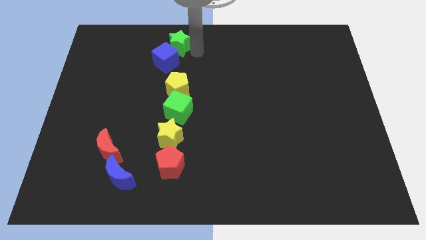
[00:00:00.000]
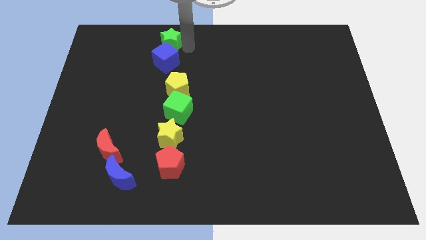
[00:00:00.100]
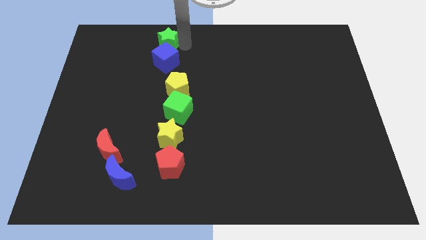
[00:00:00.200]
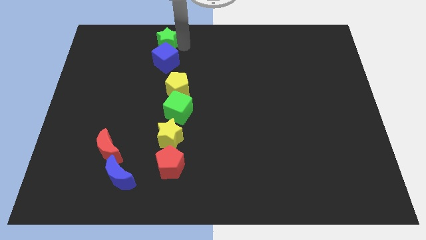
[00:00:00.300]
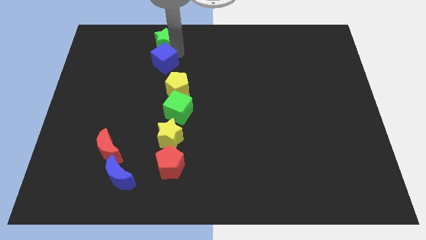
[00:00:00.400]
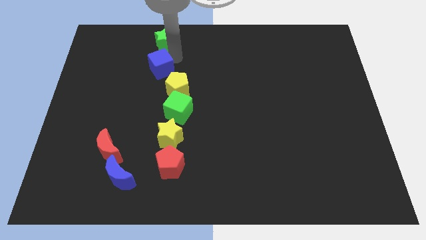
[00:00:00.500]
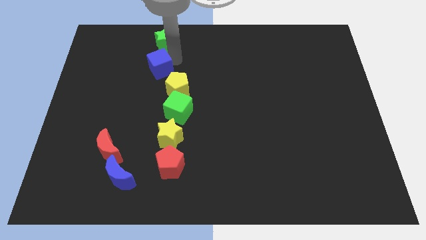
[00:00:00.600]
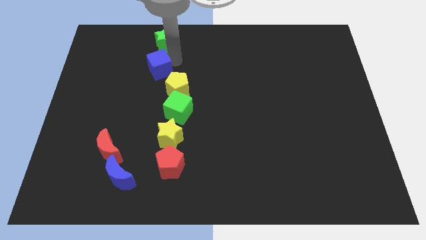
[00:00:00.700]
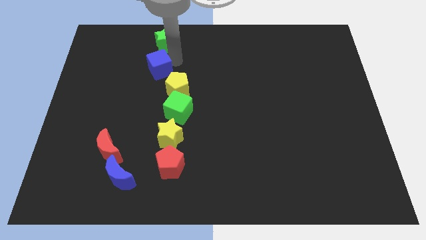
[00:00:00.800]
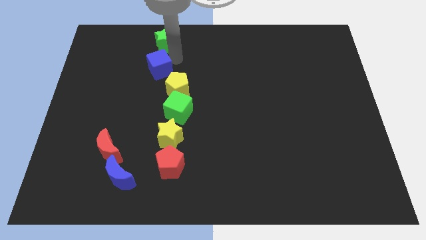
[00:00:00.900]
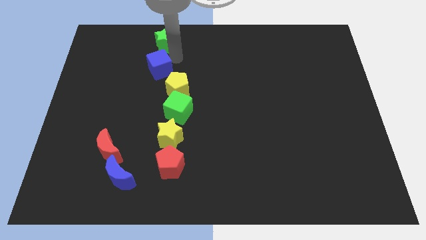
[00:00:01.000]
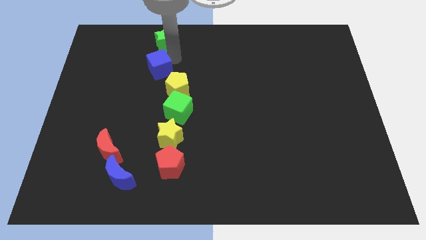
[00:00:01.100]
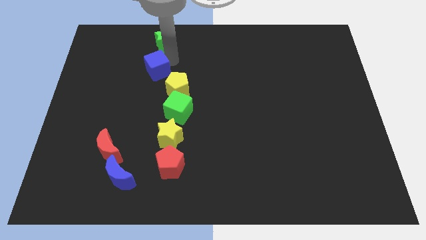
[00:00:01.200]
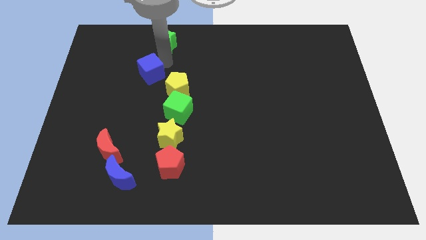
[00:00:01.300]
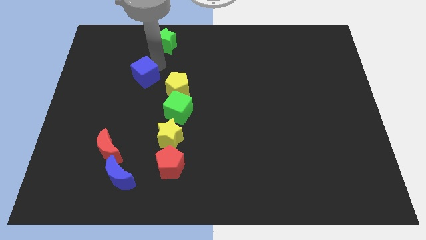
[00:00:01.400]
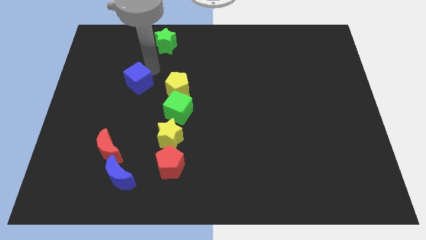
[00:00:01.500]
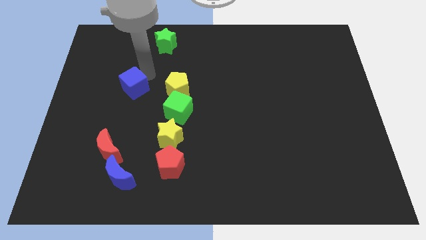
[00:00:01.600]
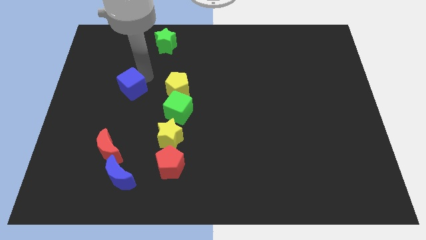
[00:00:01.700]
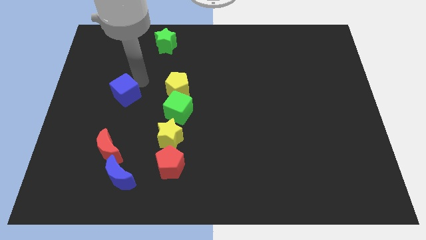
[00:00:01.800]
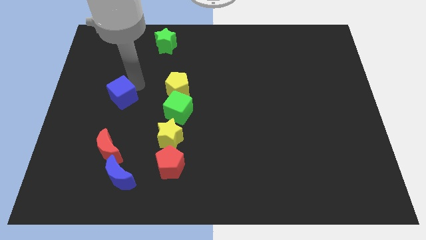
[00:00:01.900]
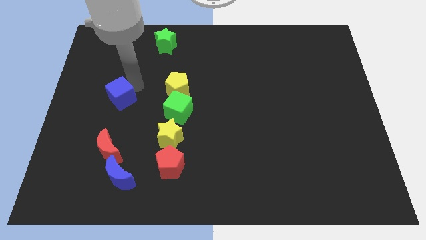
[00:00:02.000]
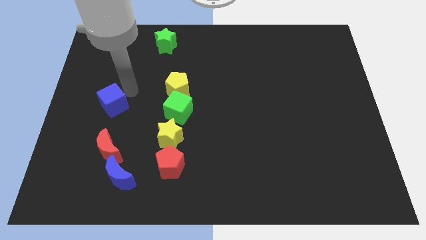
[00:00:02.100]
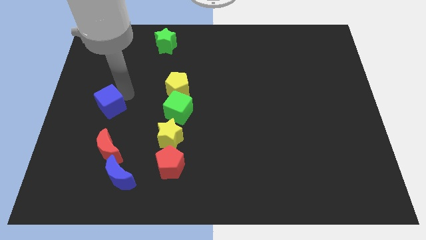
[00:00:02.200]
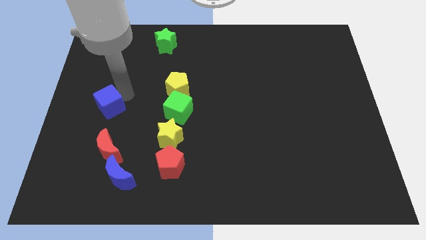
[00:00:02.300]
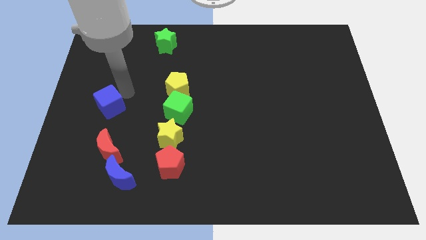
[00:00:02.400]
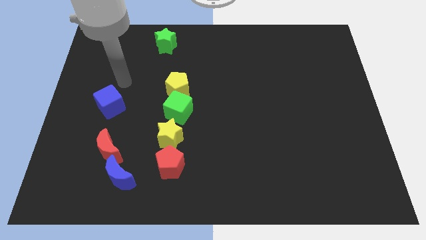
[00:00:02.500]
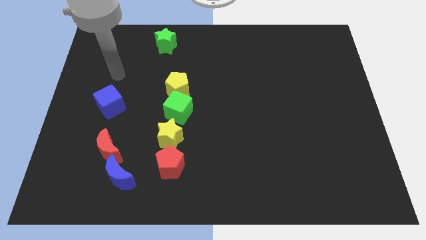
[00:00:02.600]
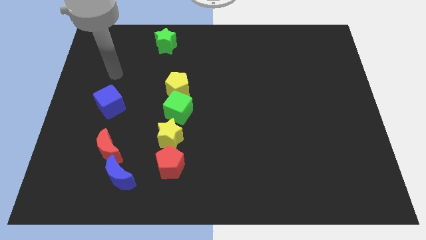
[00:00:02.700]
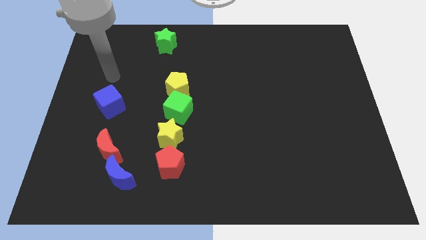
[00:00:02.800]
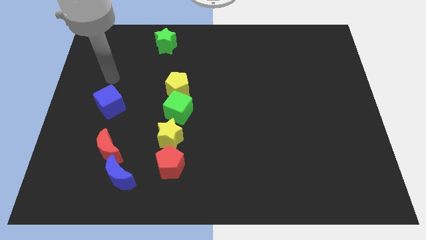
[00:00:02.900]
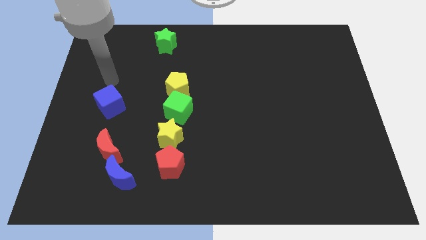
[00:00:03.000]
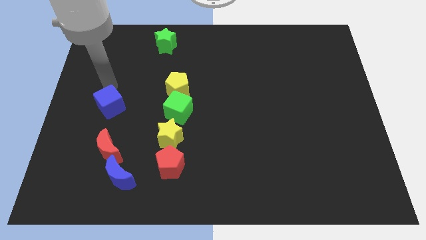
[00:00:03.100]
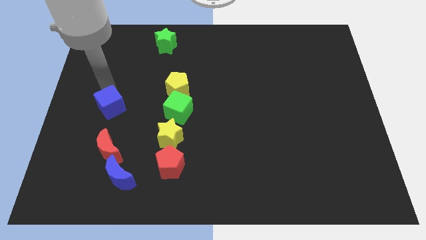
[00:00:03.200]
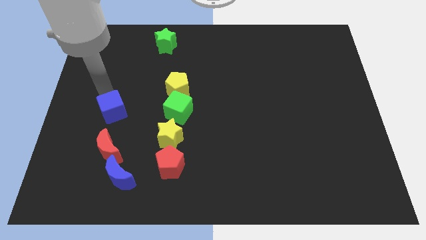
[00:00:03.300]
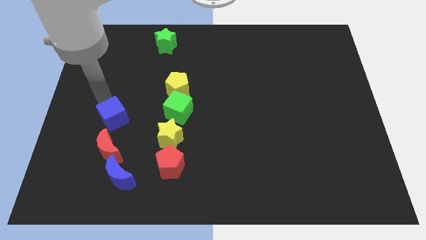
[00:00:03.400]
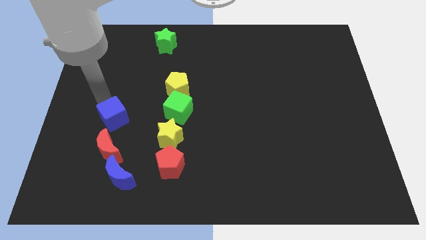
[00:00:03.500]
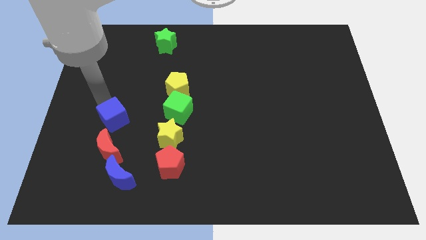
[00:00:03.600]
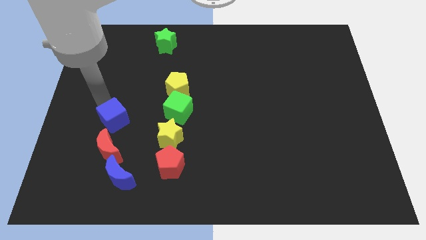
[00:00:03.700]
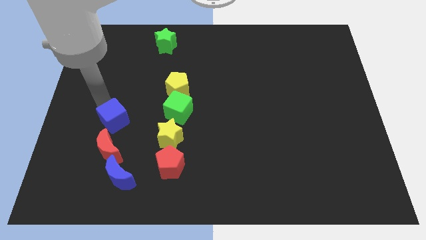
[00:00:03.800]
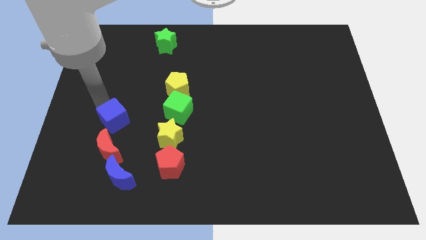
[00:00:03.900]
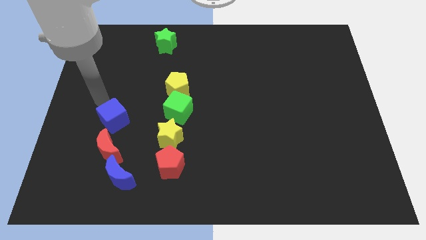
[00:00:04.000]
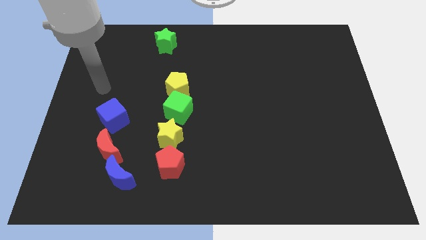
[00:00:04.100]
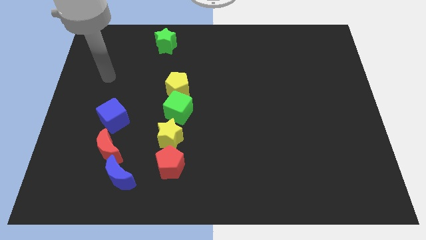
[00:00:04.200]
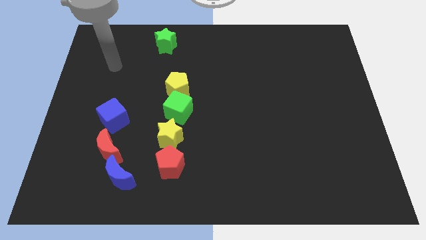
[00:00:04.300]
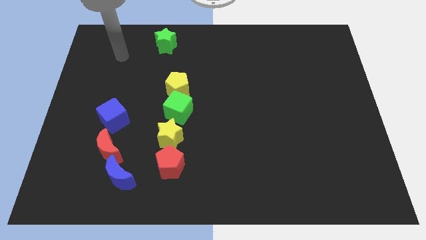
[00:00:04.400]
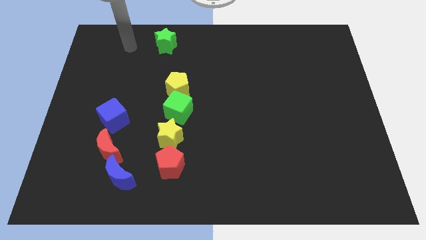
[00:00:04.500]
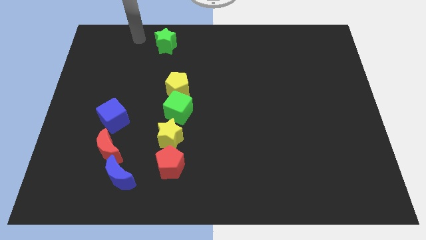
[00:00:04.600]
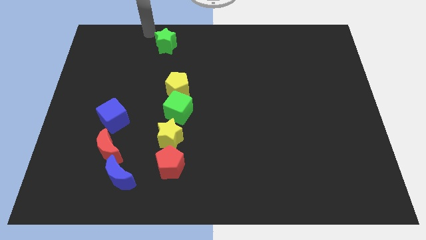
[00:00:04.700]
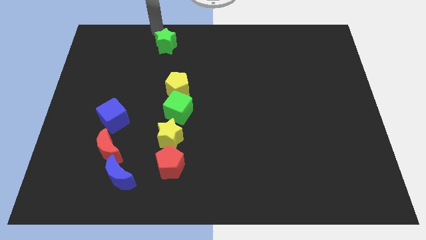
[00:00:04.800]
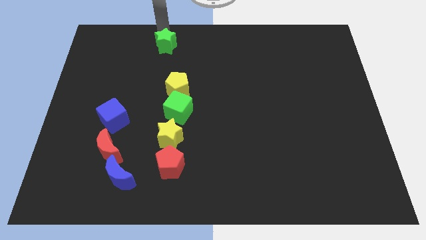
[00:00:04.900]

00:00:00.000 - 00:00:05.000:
place the blue cube to the left of the green cube

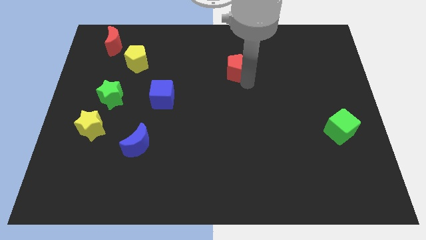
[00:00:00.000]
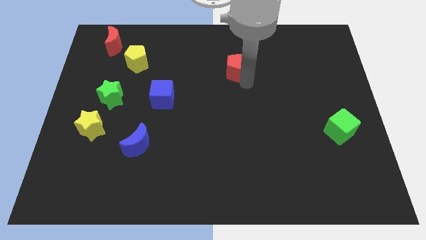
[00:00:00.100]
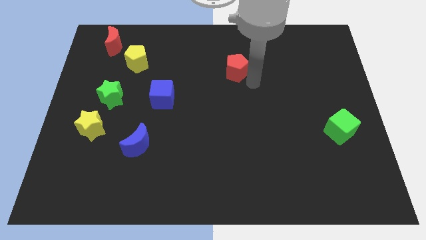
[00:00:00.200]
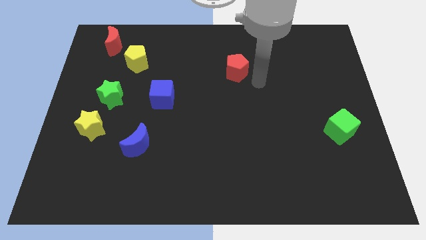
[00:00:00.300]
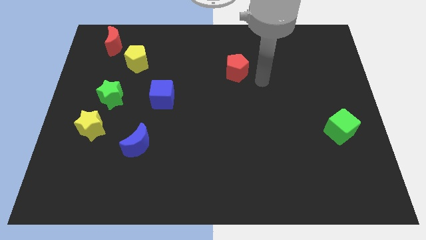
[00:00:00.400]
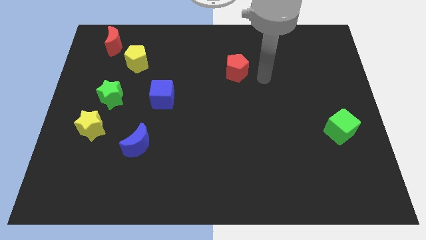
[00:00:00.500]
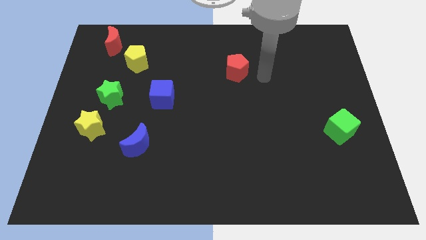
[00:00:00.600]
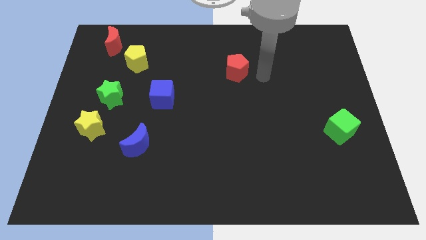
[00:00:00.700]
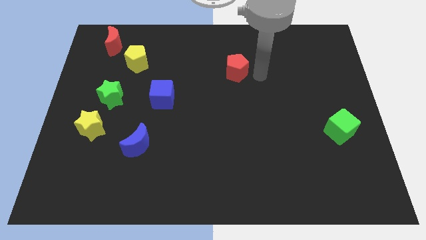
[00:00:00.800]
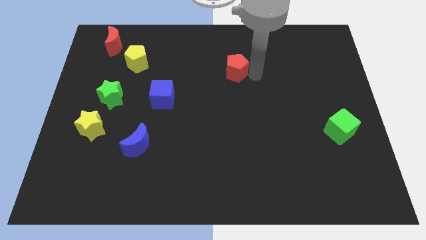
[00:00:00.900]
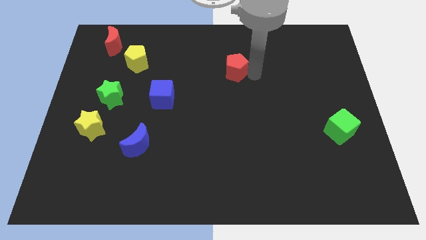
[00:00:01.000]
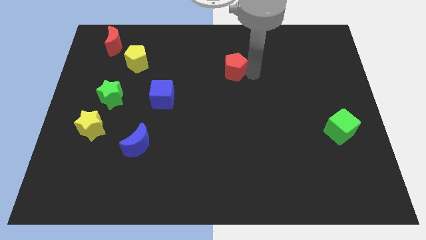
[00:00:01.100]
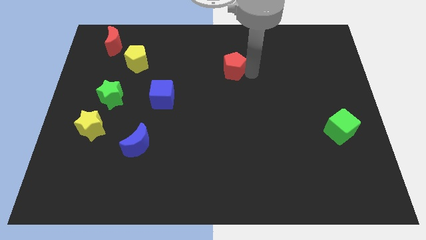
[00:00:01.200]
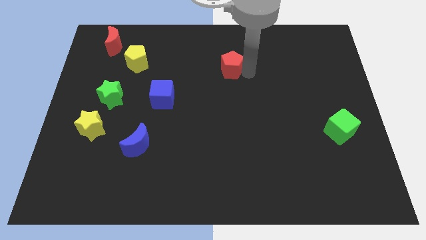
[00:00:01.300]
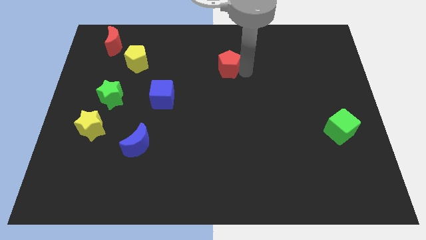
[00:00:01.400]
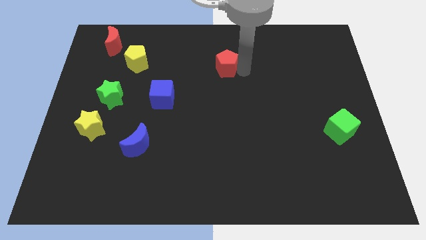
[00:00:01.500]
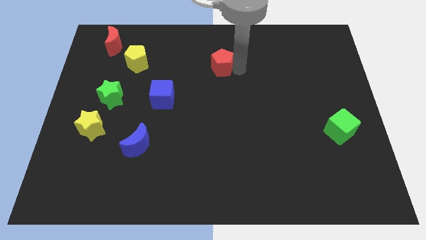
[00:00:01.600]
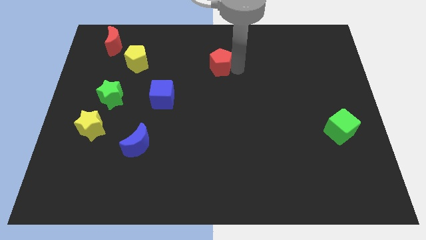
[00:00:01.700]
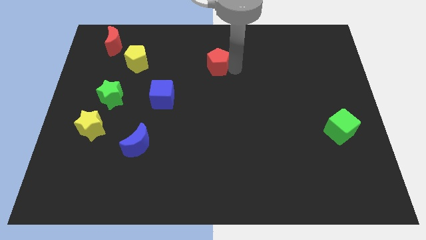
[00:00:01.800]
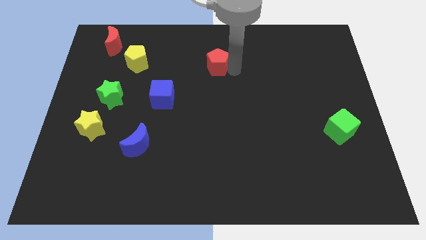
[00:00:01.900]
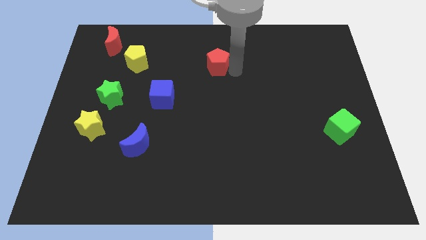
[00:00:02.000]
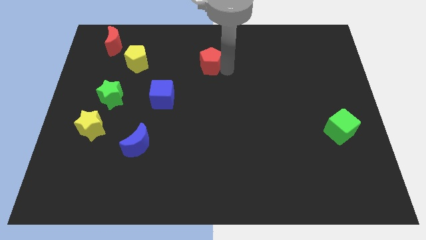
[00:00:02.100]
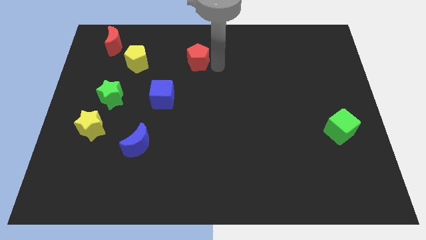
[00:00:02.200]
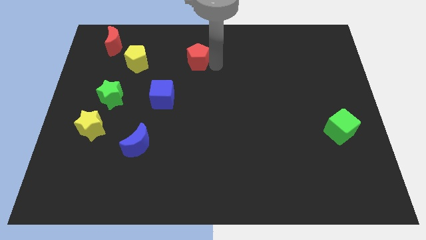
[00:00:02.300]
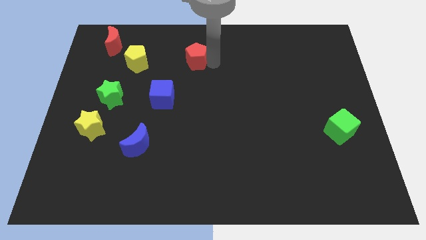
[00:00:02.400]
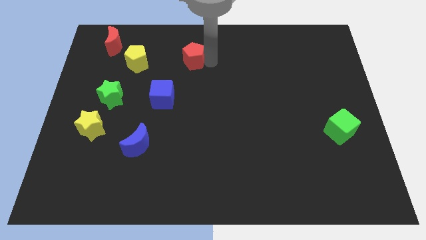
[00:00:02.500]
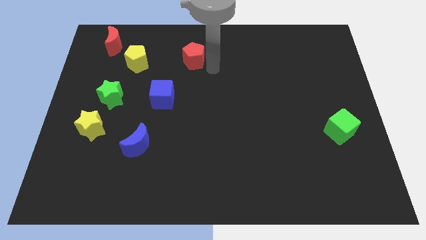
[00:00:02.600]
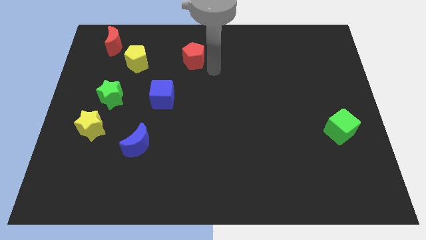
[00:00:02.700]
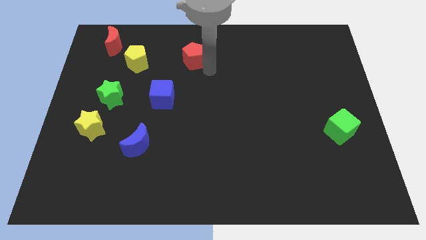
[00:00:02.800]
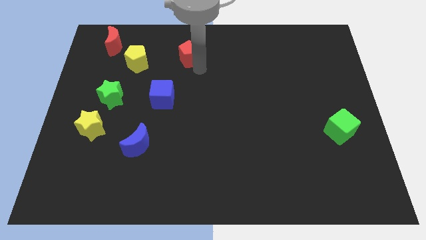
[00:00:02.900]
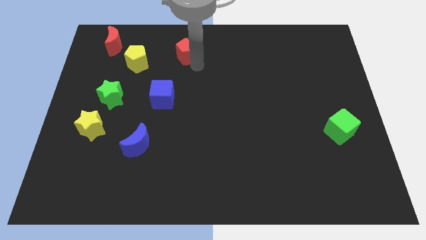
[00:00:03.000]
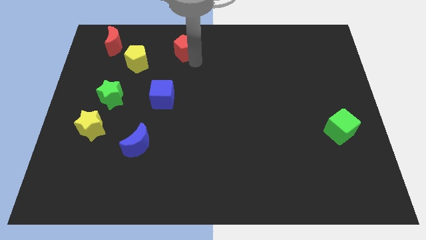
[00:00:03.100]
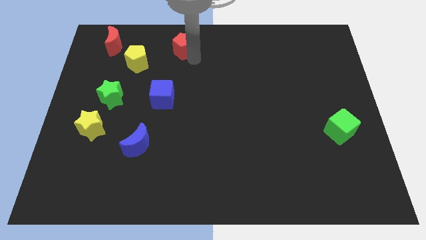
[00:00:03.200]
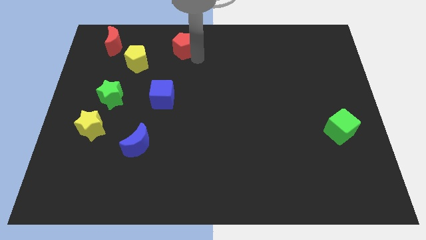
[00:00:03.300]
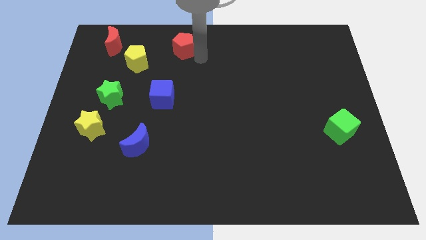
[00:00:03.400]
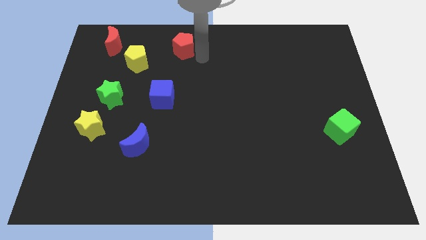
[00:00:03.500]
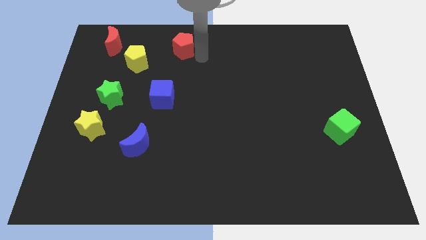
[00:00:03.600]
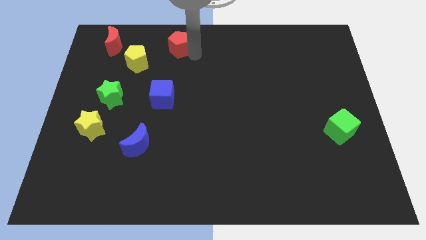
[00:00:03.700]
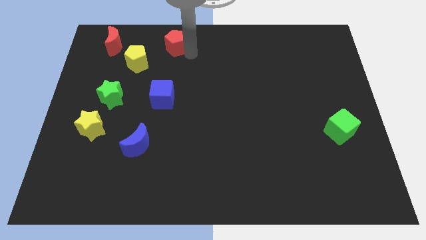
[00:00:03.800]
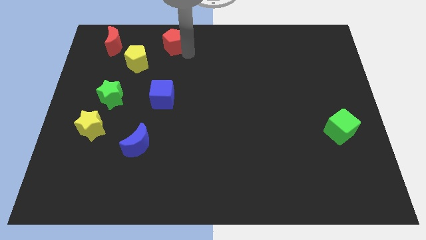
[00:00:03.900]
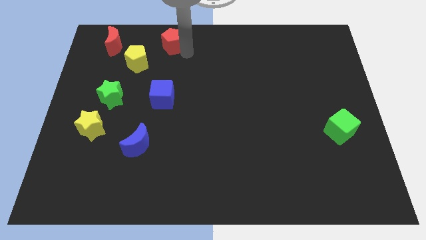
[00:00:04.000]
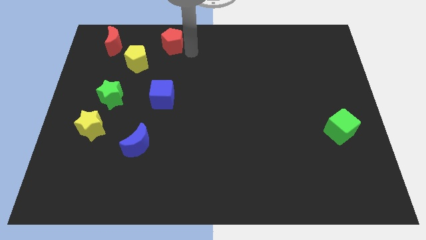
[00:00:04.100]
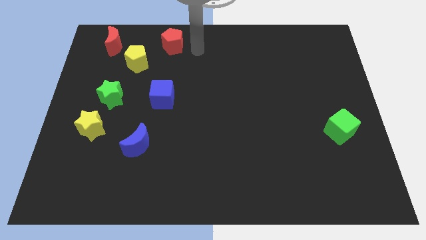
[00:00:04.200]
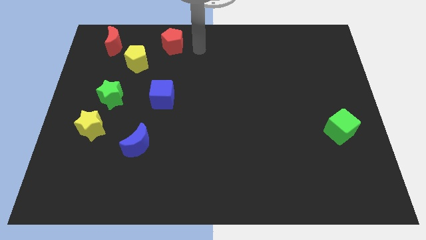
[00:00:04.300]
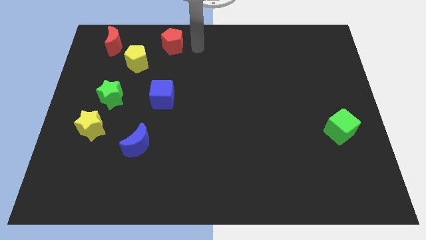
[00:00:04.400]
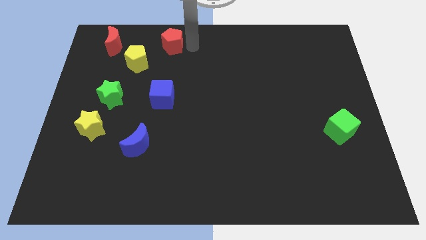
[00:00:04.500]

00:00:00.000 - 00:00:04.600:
move the red pentagon parallel right to the red moon
